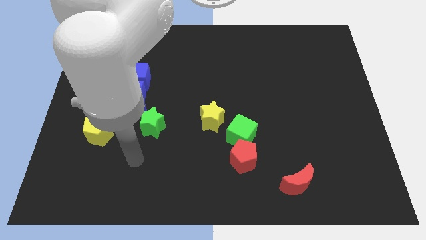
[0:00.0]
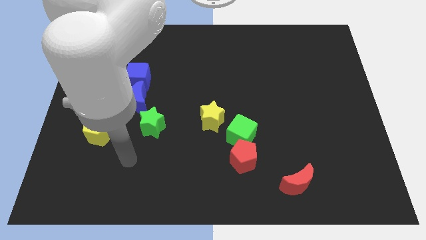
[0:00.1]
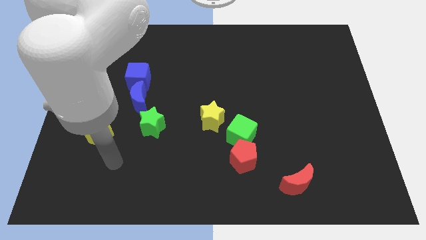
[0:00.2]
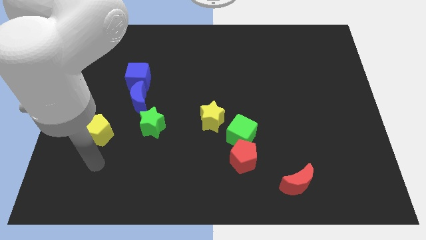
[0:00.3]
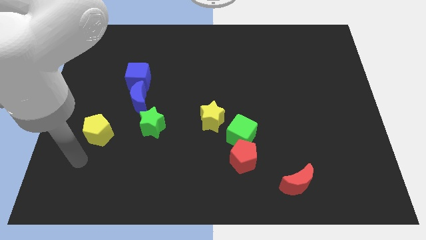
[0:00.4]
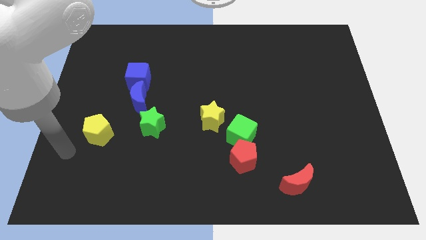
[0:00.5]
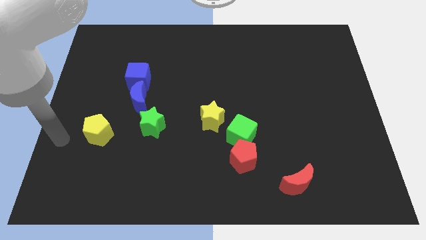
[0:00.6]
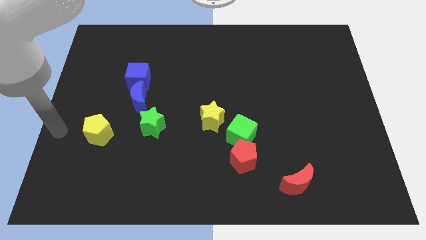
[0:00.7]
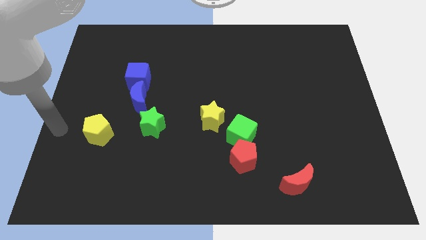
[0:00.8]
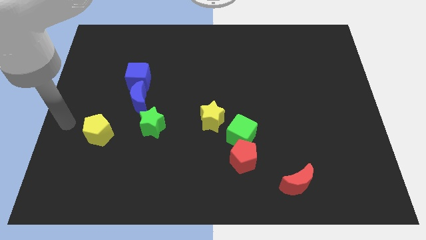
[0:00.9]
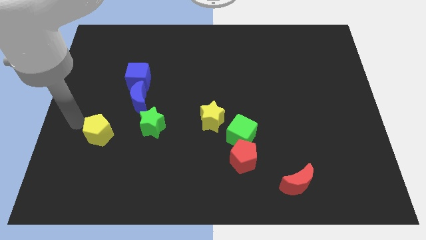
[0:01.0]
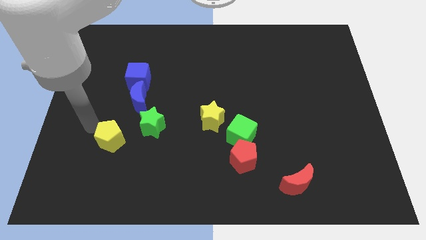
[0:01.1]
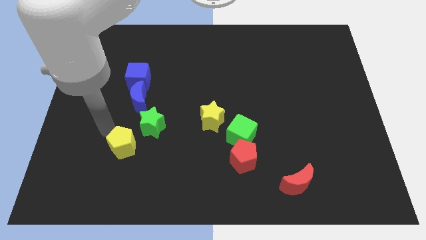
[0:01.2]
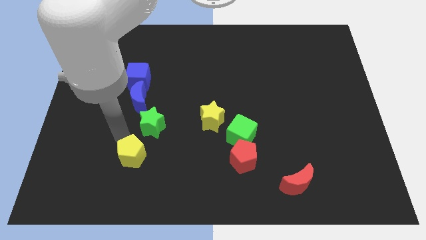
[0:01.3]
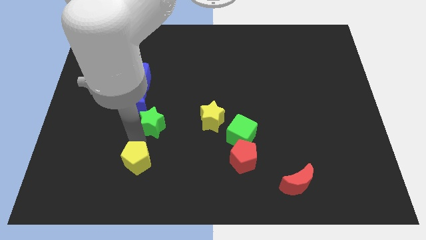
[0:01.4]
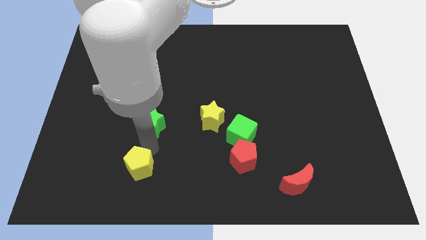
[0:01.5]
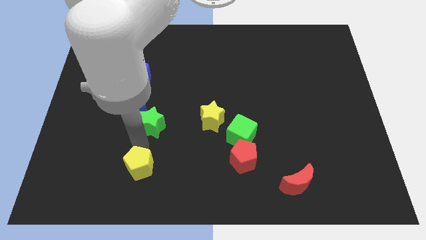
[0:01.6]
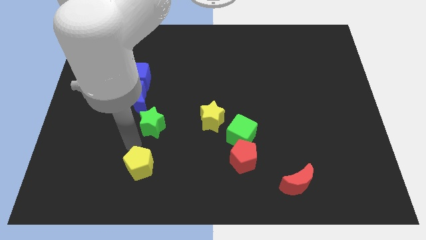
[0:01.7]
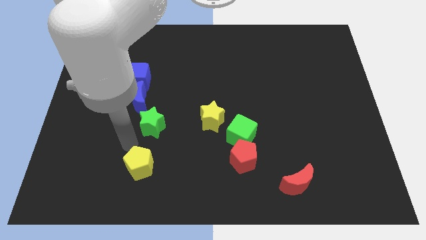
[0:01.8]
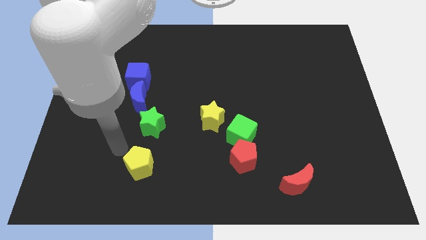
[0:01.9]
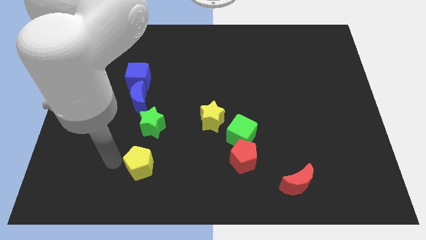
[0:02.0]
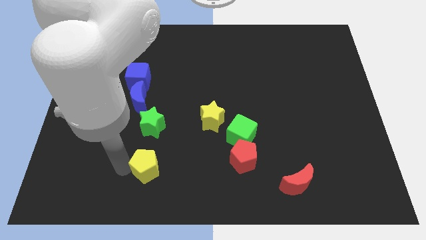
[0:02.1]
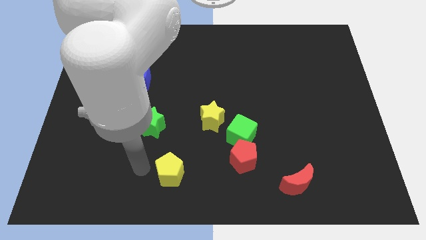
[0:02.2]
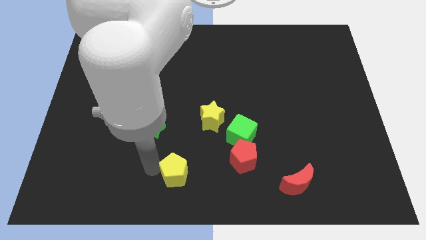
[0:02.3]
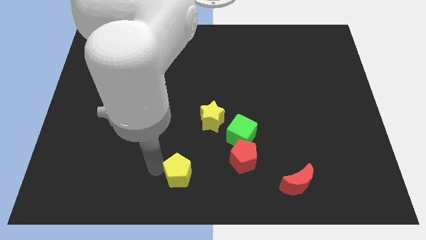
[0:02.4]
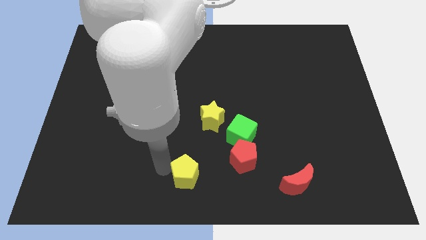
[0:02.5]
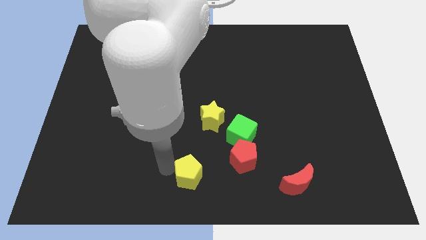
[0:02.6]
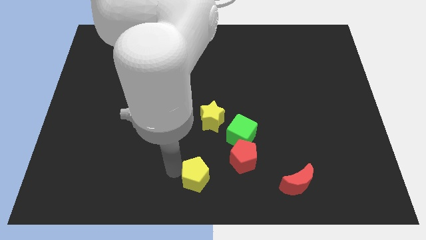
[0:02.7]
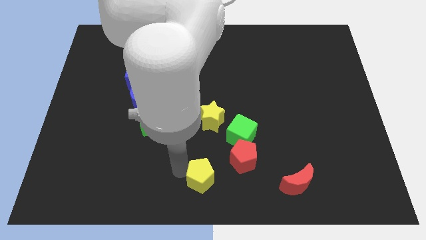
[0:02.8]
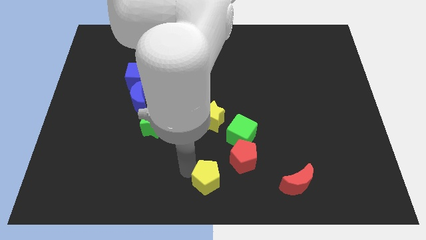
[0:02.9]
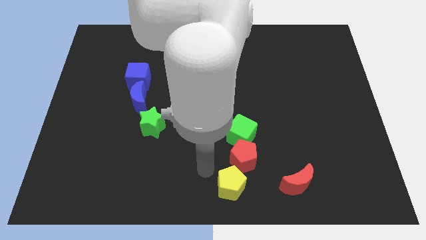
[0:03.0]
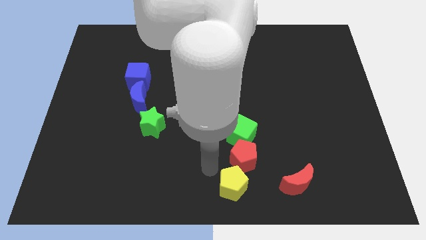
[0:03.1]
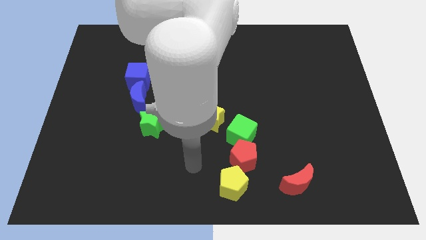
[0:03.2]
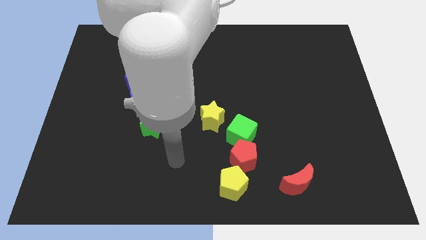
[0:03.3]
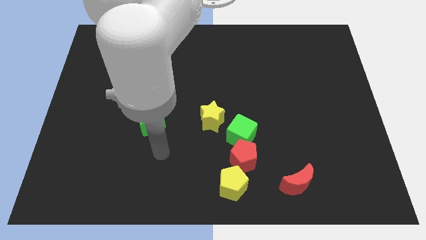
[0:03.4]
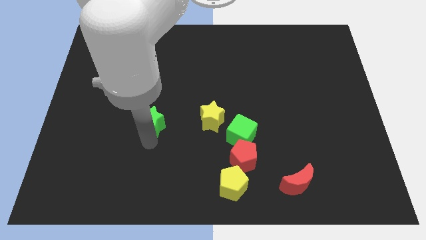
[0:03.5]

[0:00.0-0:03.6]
place the yellow pentagon to the bottom of red pentagon

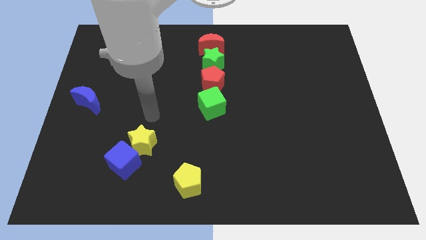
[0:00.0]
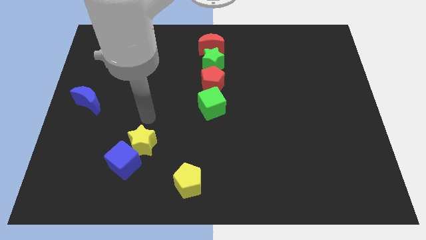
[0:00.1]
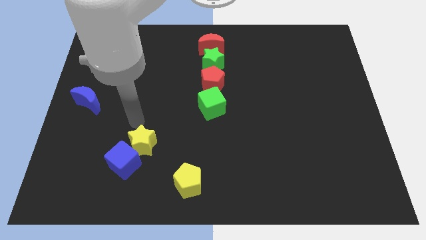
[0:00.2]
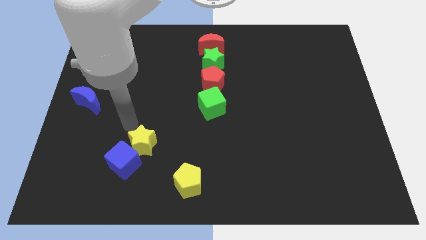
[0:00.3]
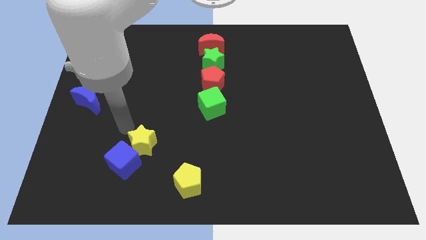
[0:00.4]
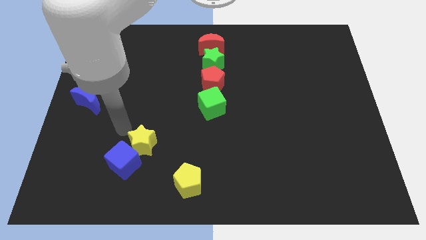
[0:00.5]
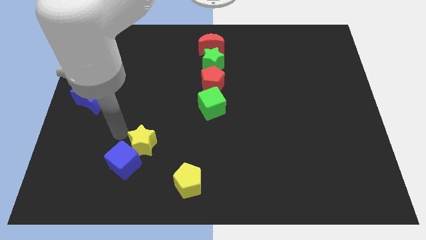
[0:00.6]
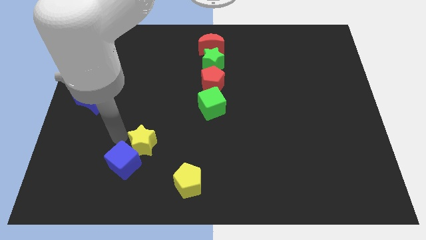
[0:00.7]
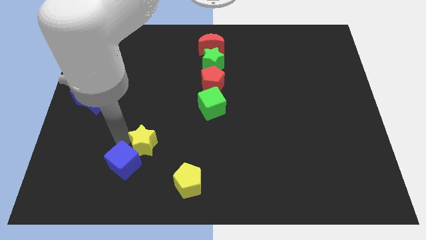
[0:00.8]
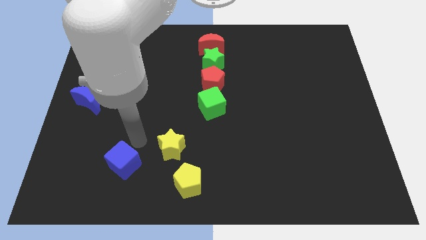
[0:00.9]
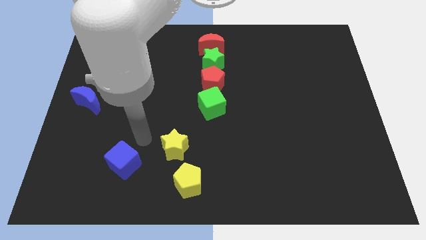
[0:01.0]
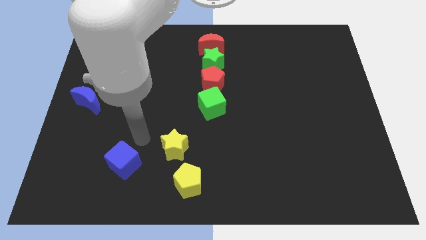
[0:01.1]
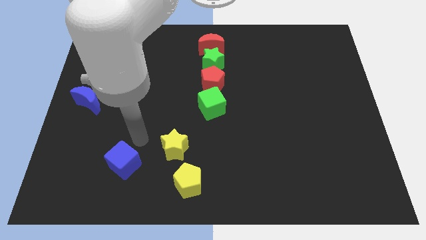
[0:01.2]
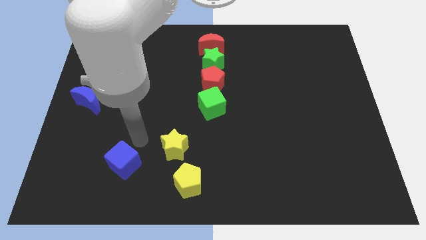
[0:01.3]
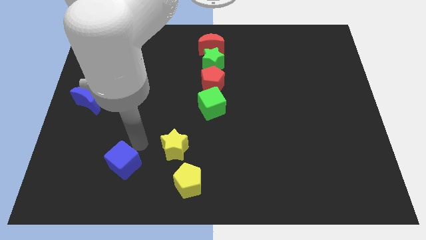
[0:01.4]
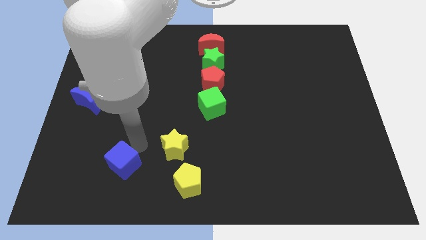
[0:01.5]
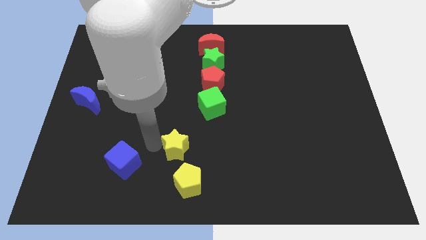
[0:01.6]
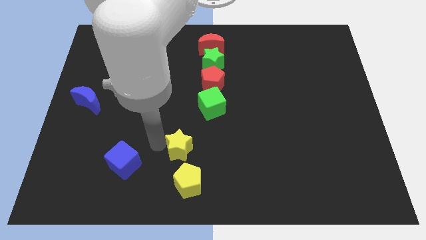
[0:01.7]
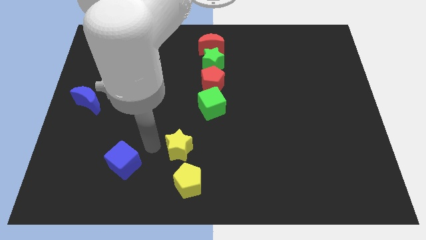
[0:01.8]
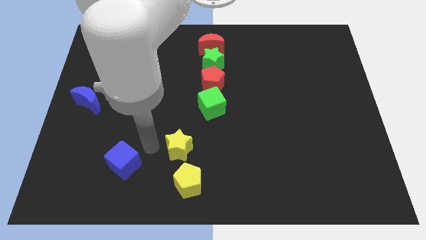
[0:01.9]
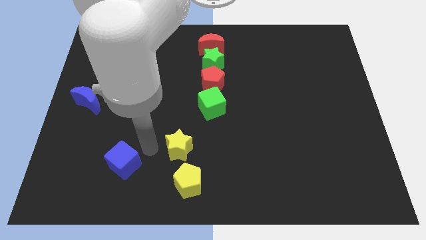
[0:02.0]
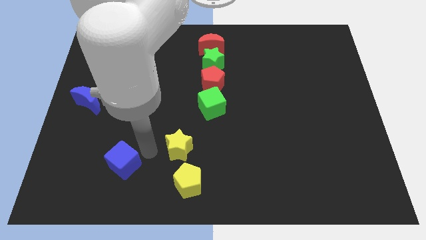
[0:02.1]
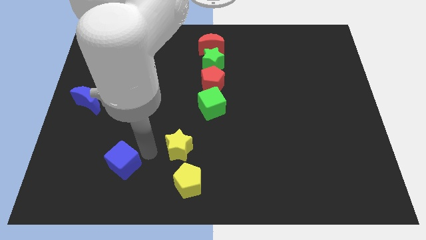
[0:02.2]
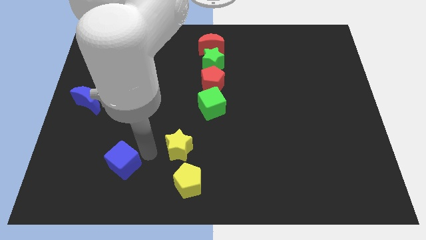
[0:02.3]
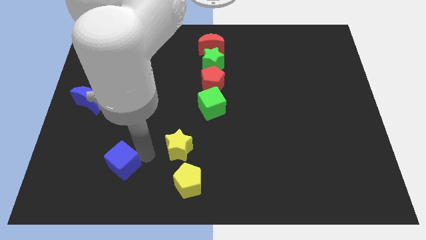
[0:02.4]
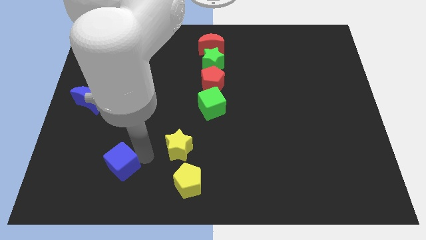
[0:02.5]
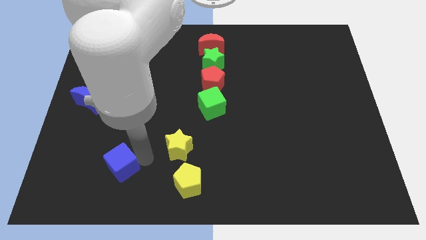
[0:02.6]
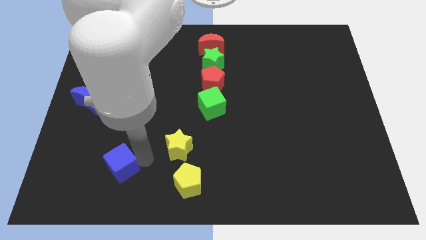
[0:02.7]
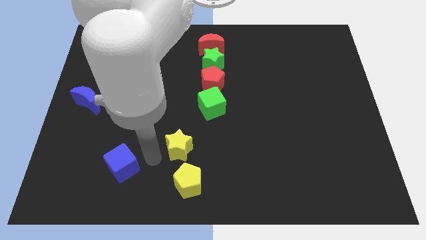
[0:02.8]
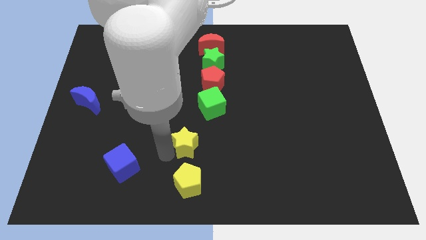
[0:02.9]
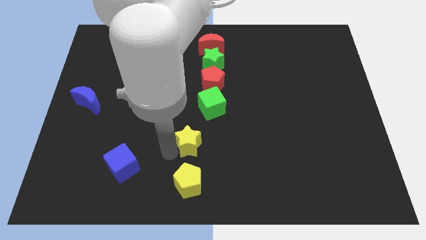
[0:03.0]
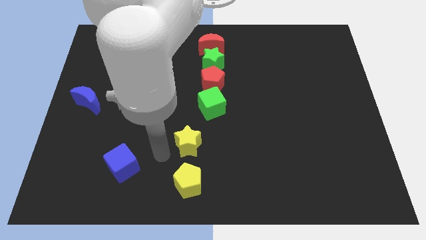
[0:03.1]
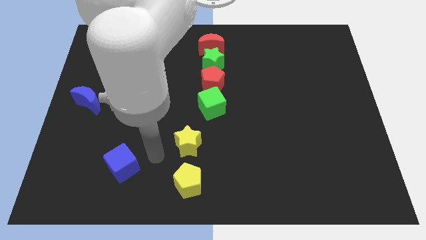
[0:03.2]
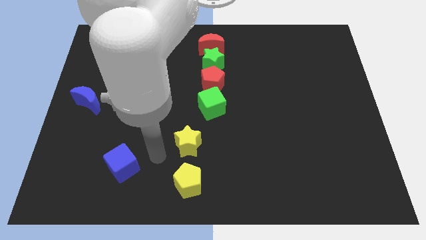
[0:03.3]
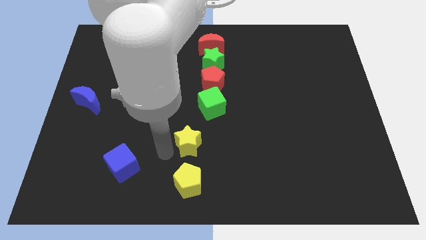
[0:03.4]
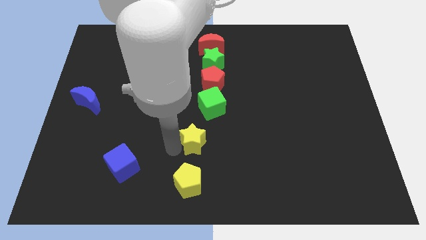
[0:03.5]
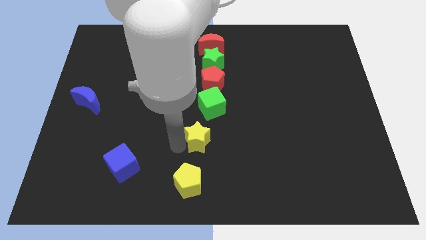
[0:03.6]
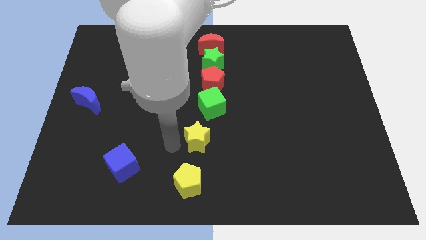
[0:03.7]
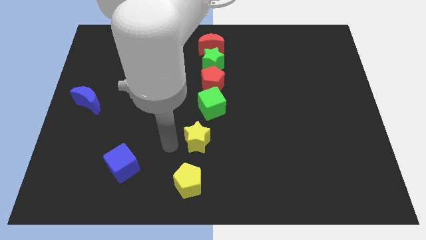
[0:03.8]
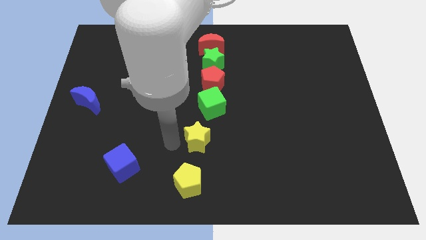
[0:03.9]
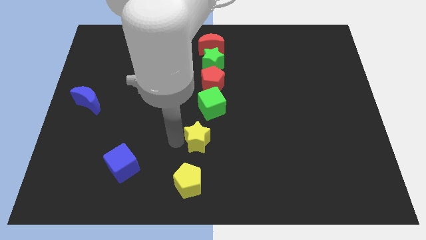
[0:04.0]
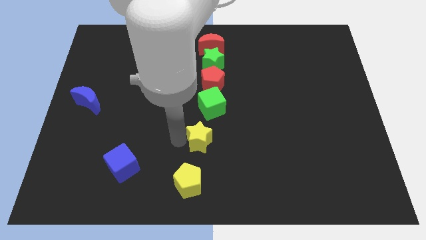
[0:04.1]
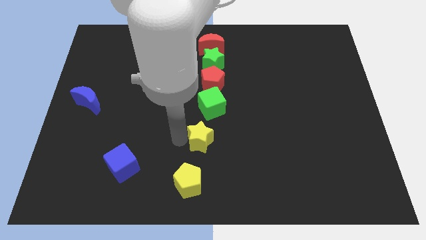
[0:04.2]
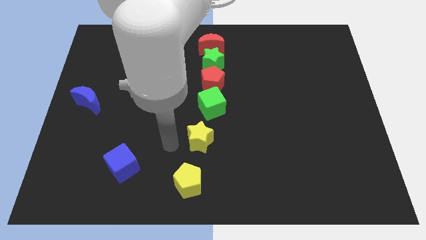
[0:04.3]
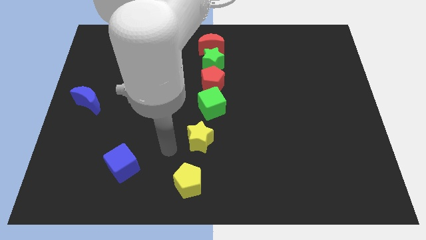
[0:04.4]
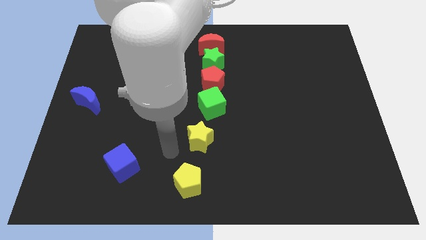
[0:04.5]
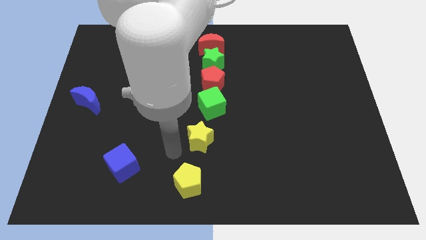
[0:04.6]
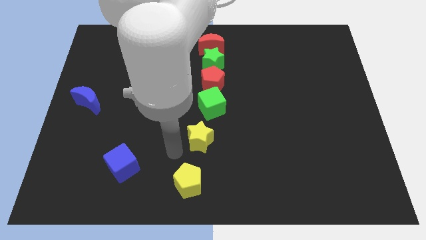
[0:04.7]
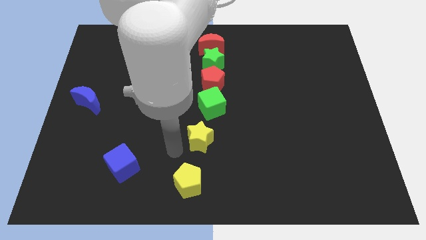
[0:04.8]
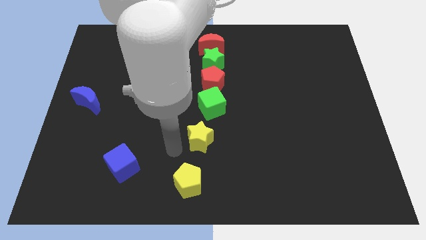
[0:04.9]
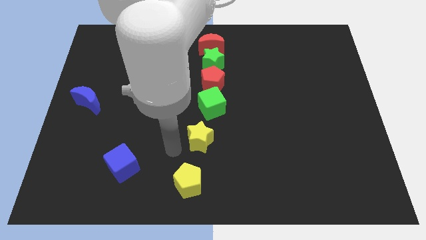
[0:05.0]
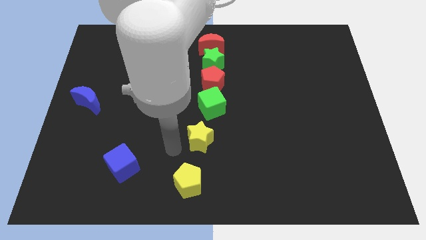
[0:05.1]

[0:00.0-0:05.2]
push the yellow star to the top side of the yellow pentagon

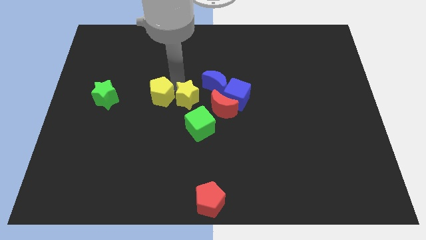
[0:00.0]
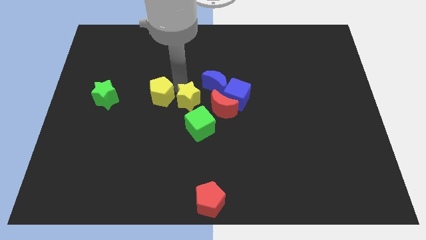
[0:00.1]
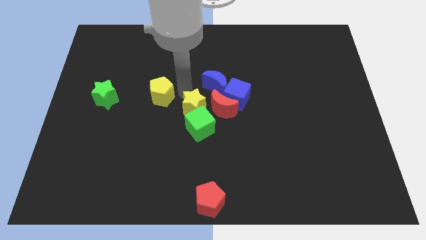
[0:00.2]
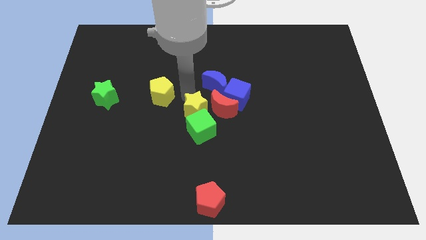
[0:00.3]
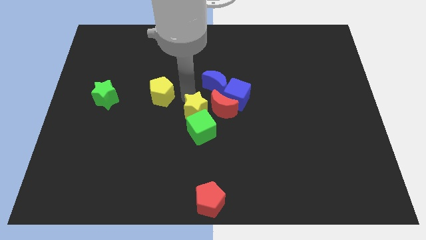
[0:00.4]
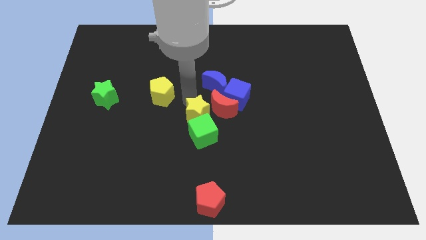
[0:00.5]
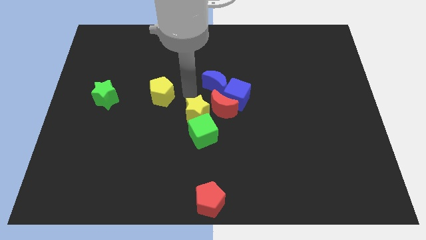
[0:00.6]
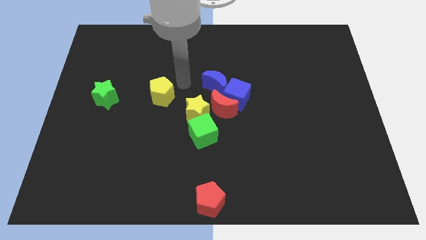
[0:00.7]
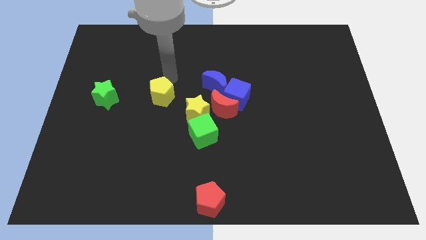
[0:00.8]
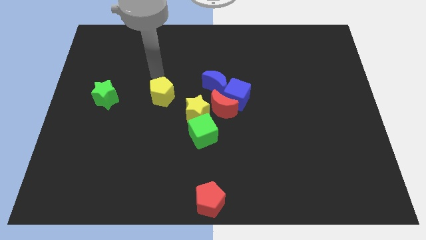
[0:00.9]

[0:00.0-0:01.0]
move the yellow star into the green cube
